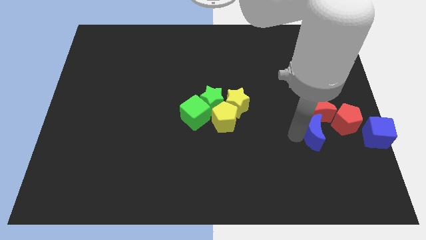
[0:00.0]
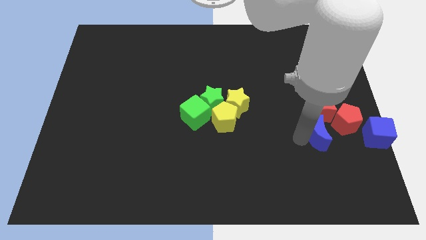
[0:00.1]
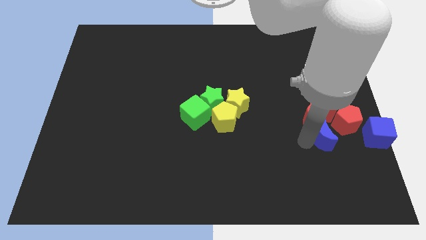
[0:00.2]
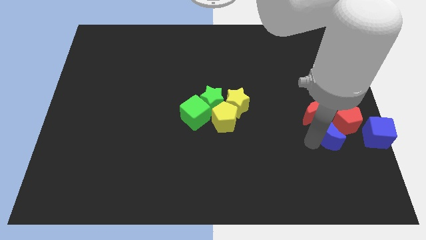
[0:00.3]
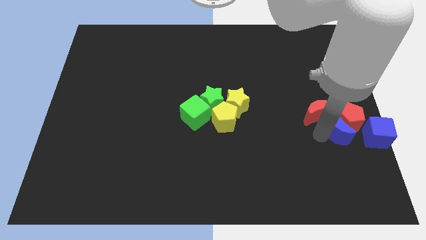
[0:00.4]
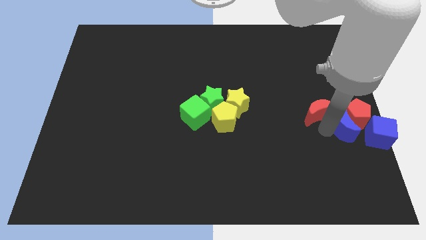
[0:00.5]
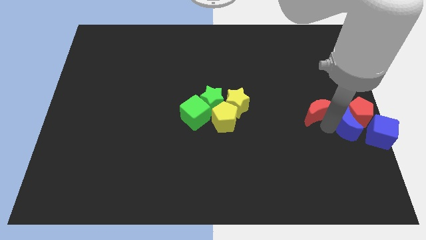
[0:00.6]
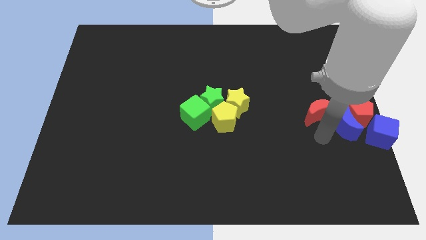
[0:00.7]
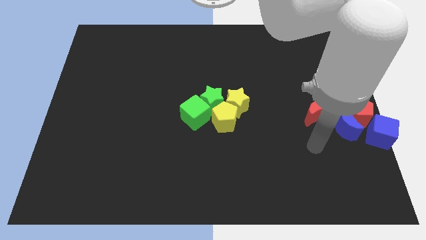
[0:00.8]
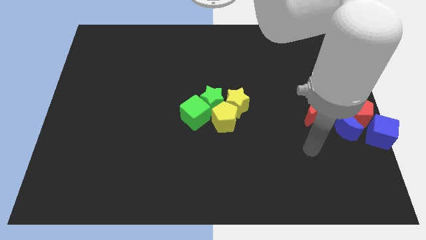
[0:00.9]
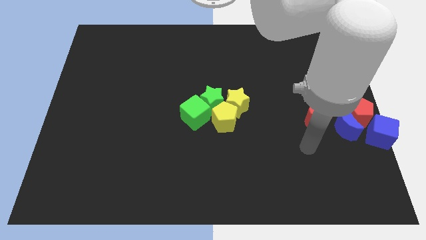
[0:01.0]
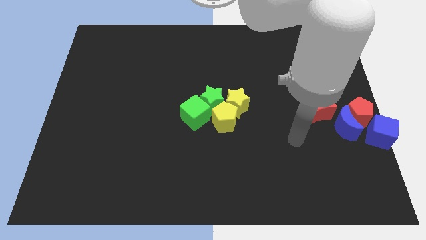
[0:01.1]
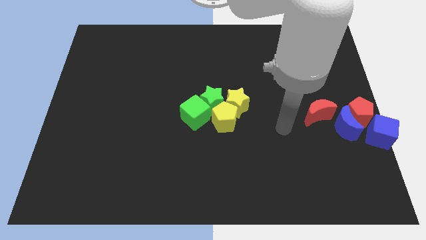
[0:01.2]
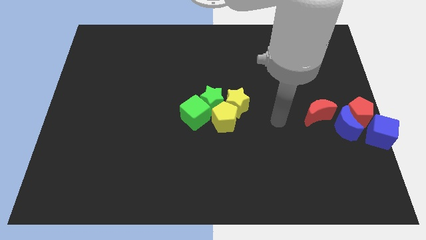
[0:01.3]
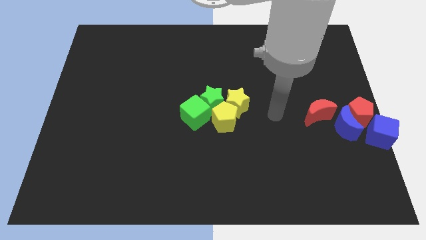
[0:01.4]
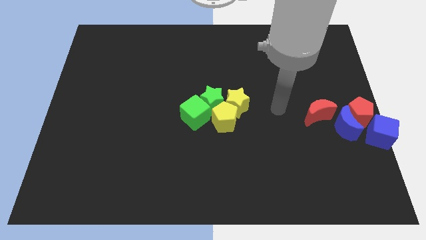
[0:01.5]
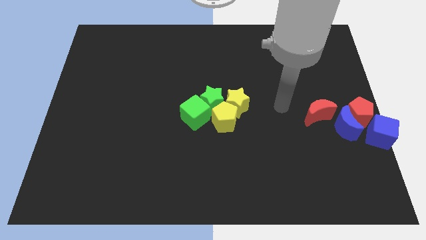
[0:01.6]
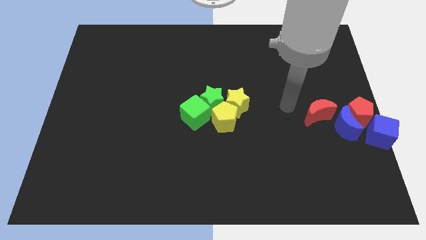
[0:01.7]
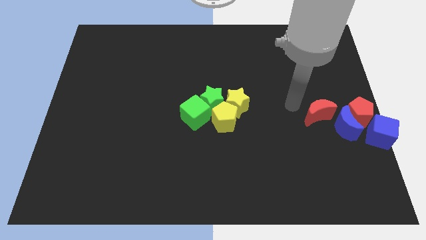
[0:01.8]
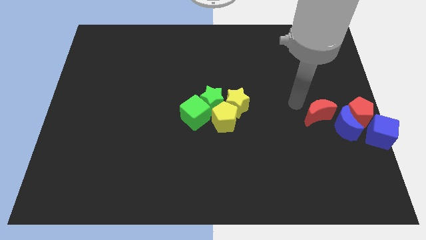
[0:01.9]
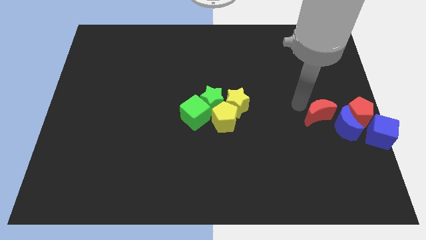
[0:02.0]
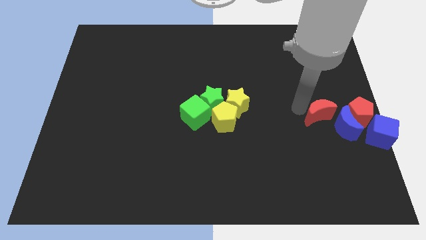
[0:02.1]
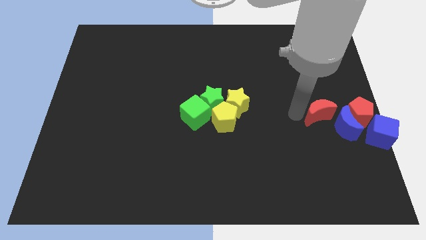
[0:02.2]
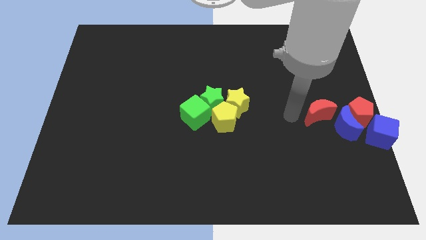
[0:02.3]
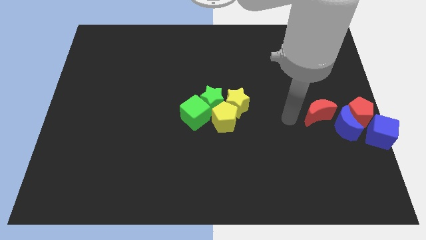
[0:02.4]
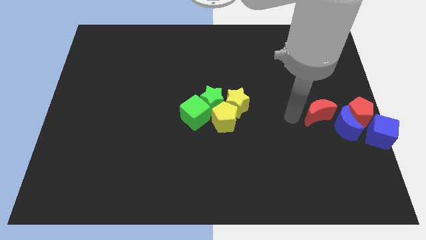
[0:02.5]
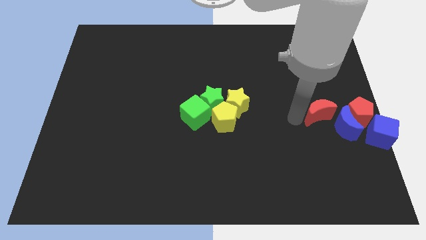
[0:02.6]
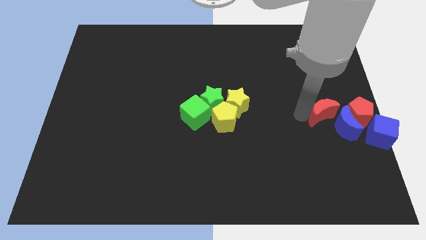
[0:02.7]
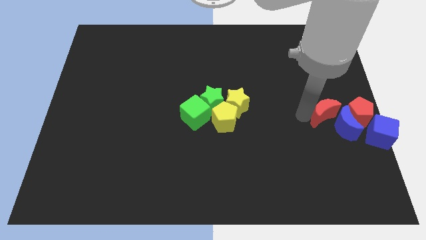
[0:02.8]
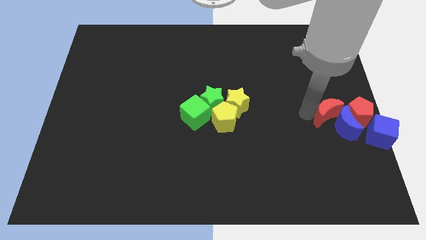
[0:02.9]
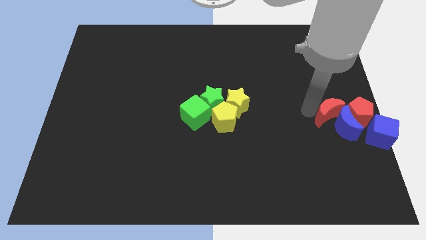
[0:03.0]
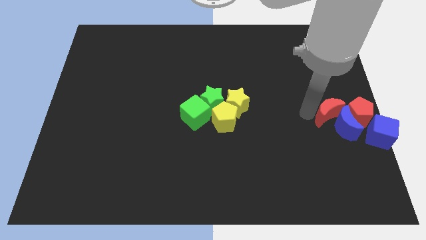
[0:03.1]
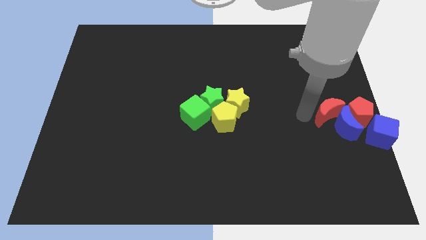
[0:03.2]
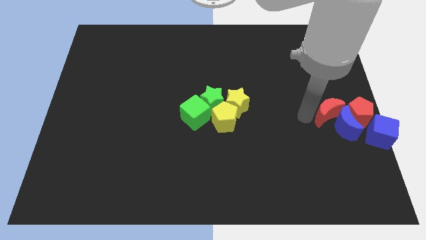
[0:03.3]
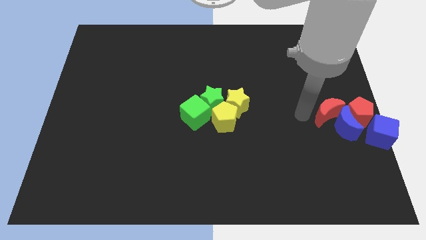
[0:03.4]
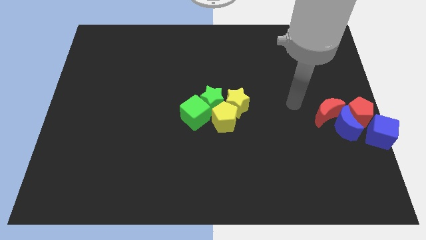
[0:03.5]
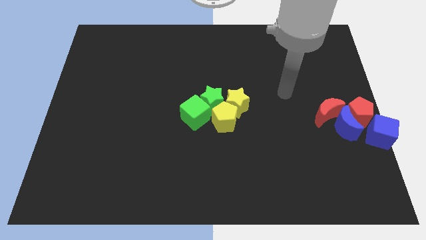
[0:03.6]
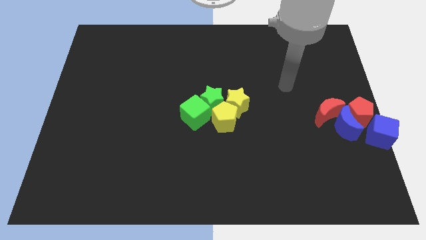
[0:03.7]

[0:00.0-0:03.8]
slide red crescent and blue moon into the group of blocks

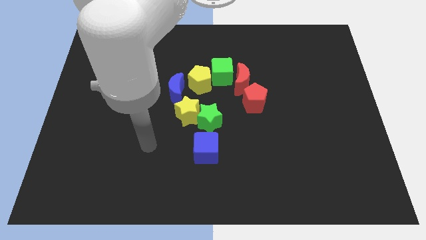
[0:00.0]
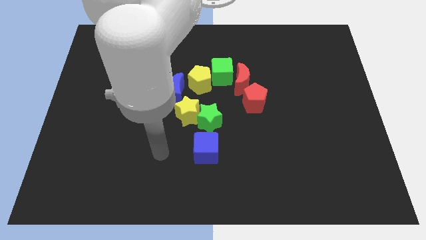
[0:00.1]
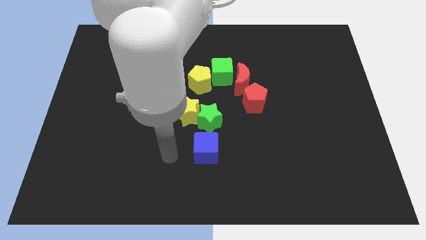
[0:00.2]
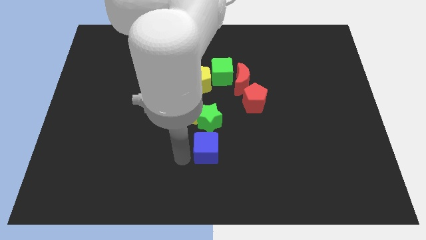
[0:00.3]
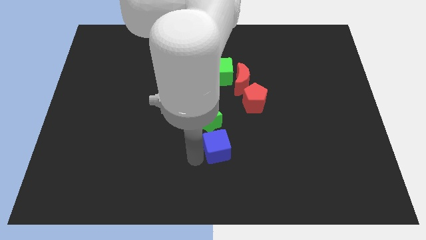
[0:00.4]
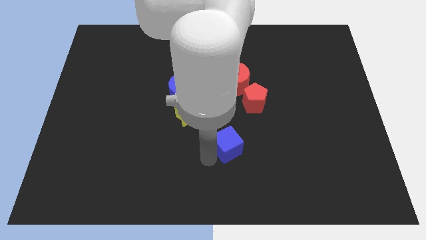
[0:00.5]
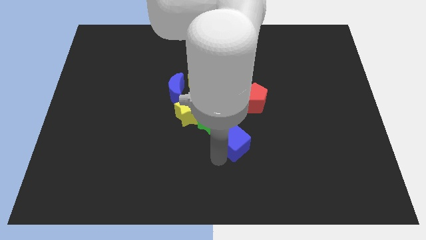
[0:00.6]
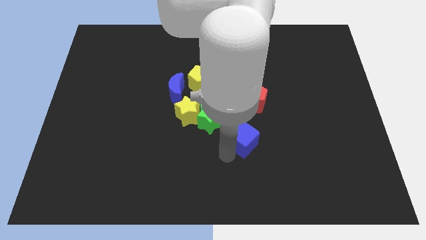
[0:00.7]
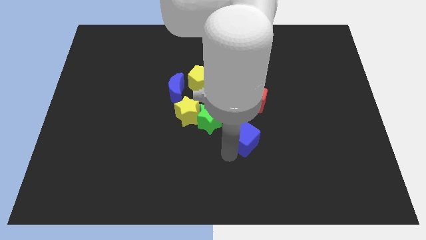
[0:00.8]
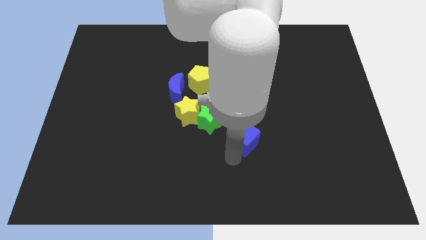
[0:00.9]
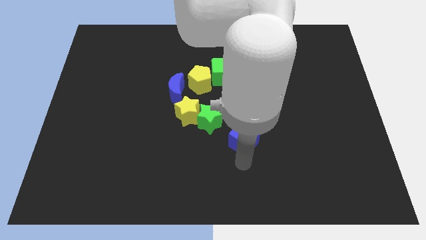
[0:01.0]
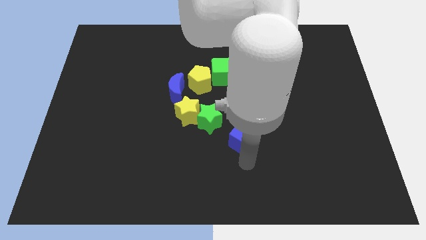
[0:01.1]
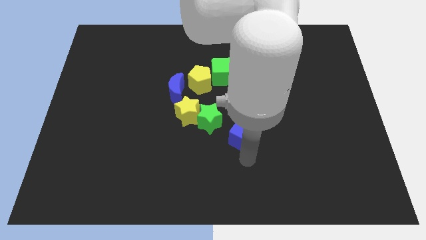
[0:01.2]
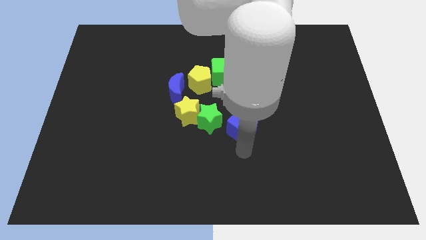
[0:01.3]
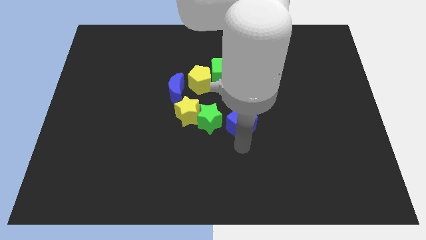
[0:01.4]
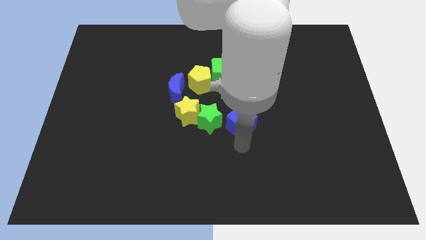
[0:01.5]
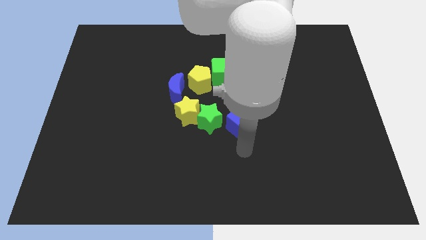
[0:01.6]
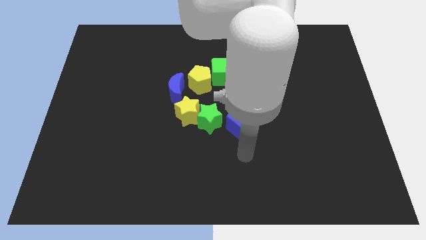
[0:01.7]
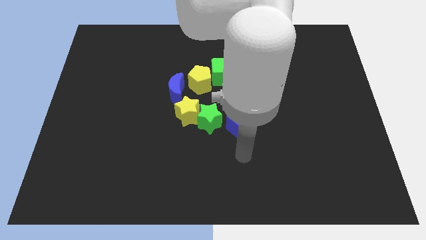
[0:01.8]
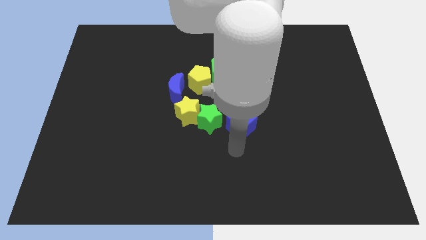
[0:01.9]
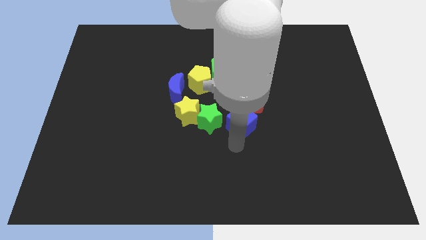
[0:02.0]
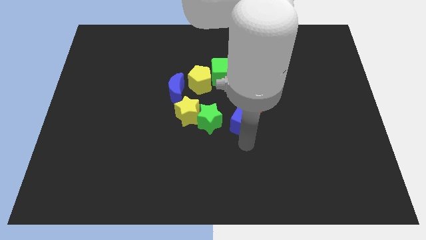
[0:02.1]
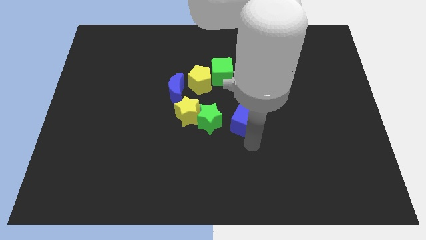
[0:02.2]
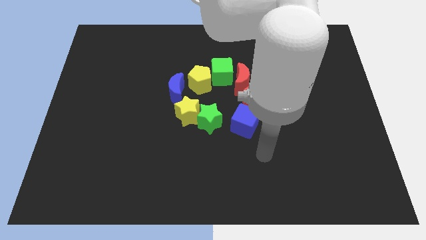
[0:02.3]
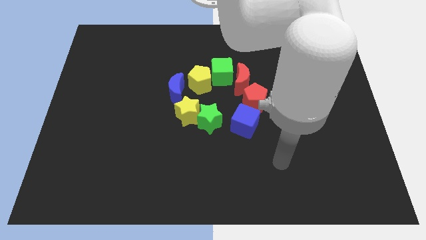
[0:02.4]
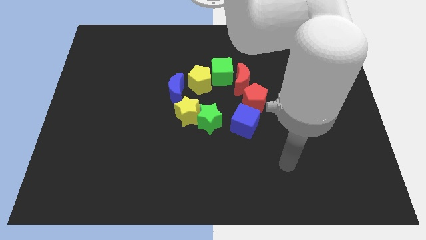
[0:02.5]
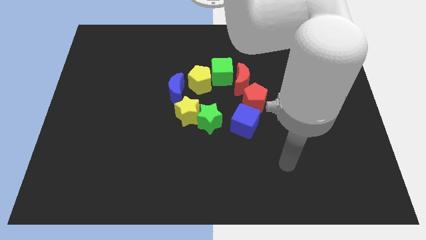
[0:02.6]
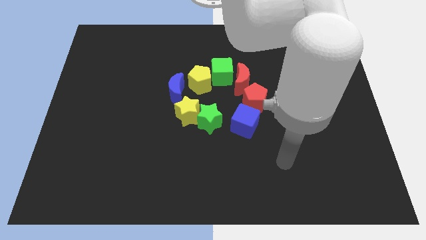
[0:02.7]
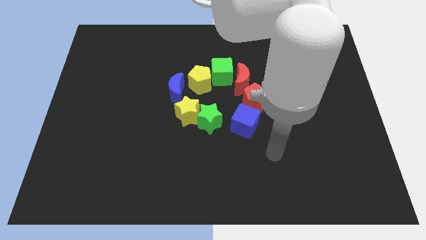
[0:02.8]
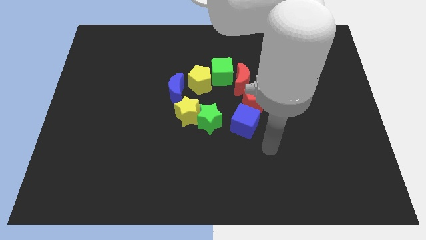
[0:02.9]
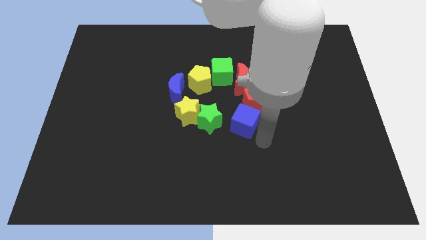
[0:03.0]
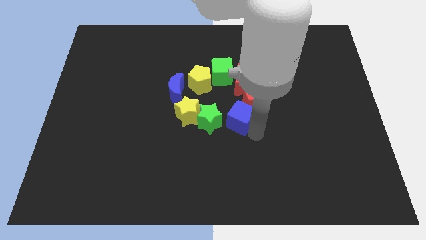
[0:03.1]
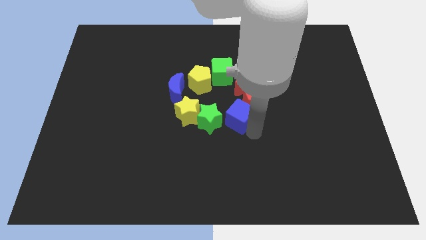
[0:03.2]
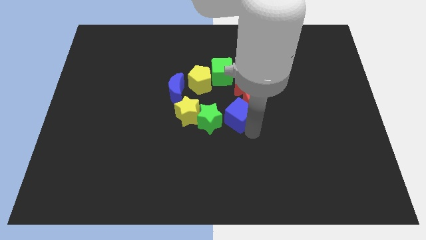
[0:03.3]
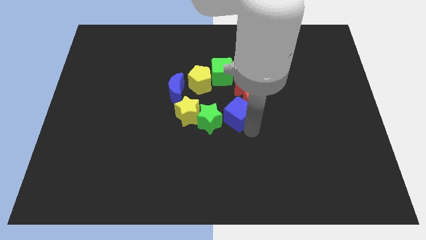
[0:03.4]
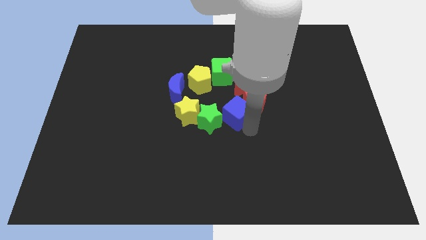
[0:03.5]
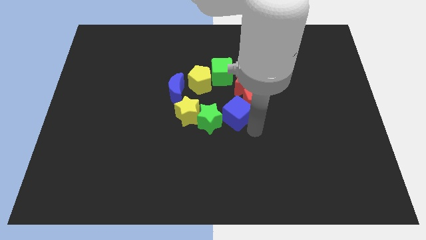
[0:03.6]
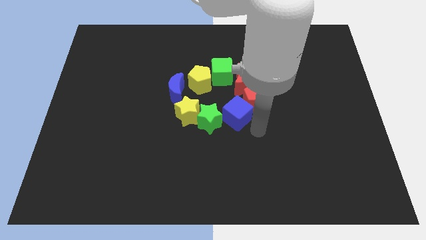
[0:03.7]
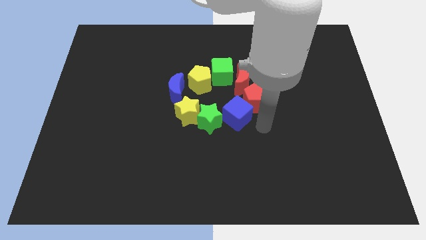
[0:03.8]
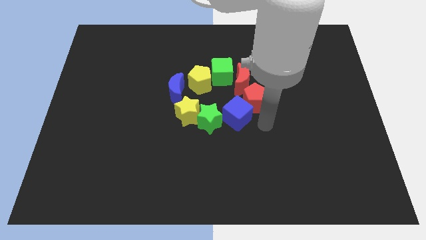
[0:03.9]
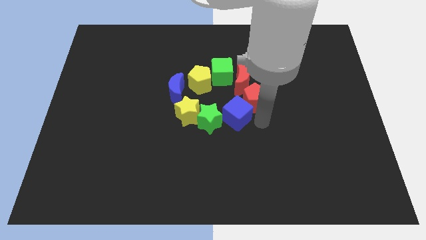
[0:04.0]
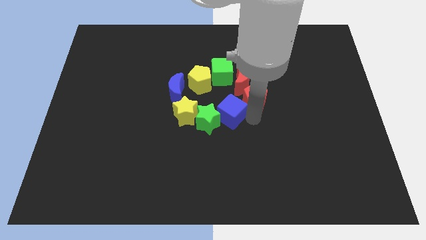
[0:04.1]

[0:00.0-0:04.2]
place blue cube to the right of green star

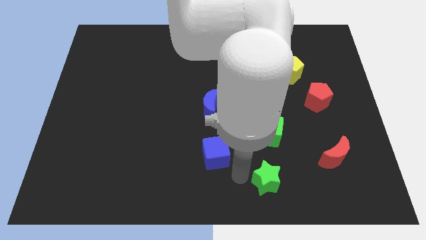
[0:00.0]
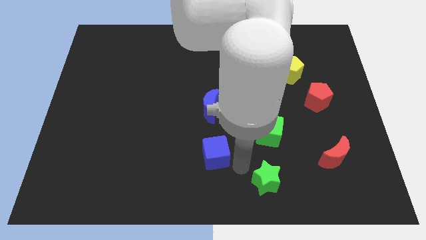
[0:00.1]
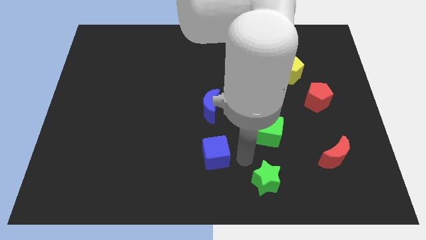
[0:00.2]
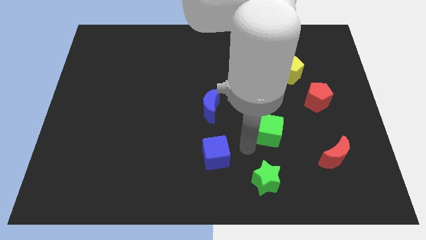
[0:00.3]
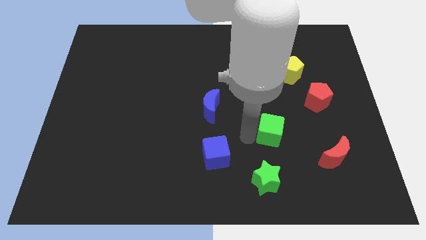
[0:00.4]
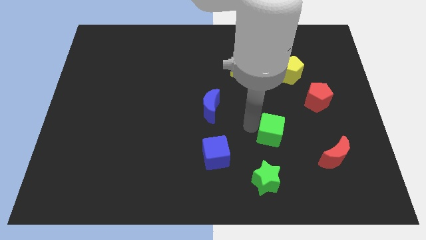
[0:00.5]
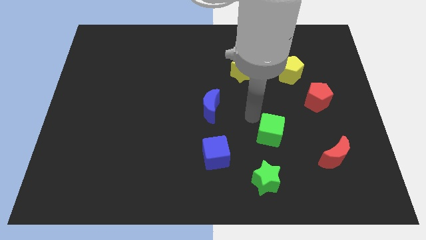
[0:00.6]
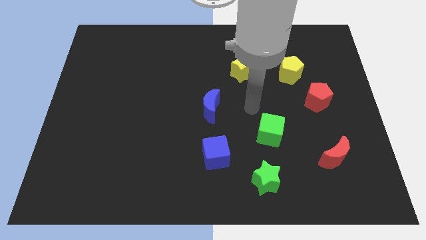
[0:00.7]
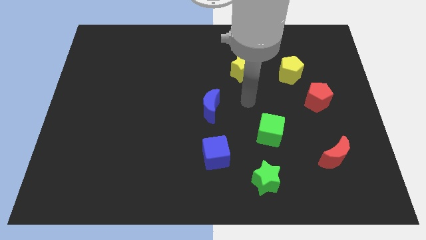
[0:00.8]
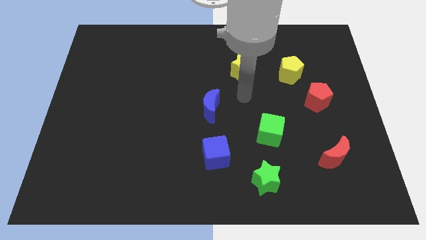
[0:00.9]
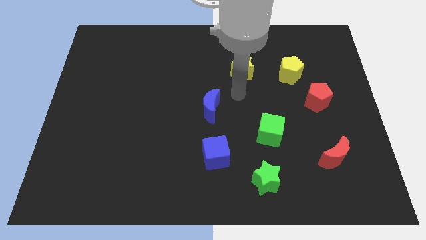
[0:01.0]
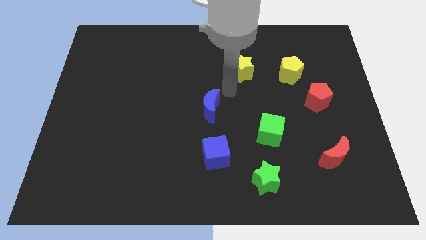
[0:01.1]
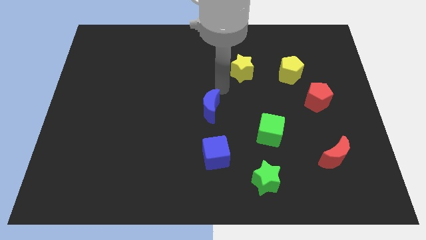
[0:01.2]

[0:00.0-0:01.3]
move your hand in between the yellow star and blue moon
